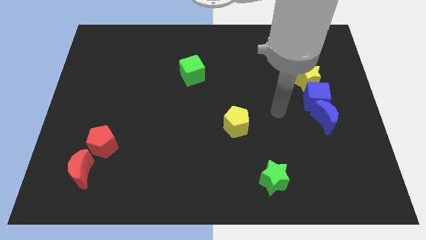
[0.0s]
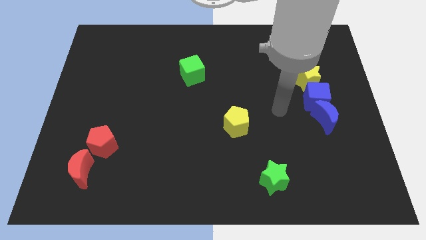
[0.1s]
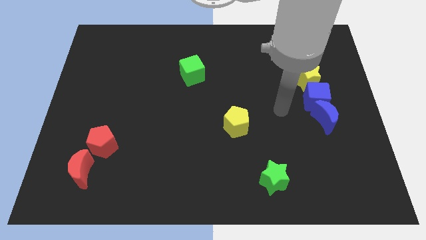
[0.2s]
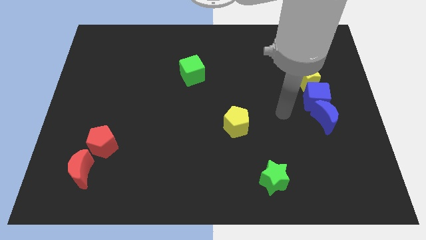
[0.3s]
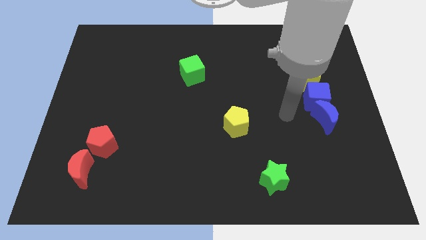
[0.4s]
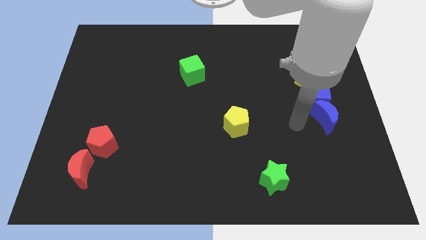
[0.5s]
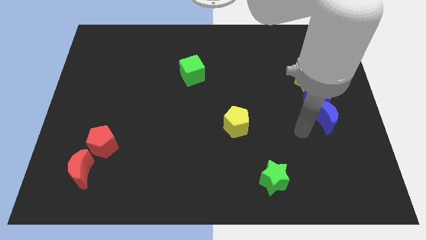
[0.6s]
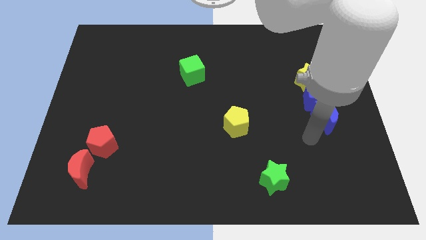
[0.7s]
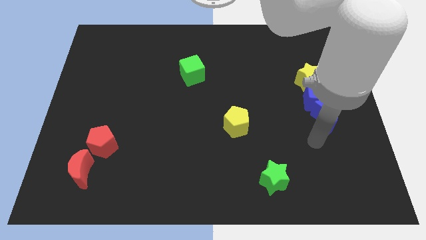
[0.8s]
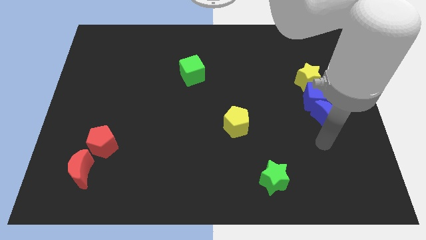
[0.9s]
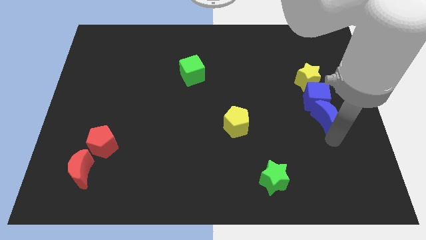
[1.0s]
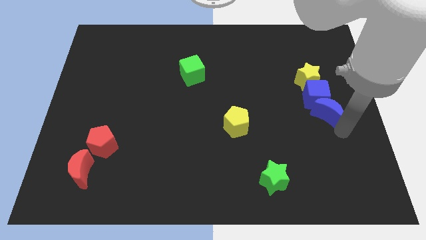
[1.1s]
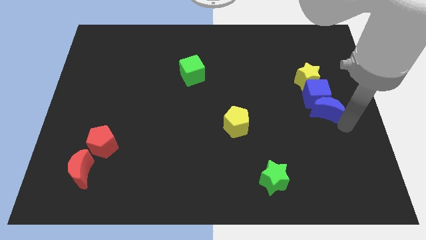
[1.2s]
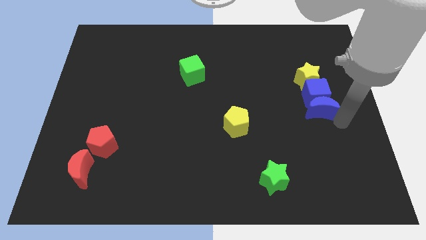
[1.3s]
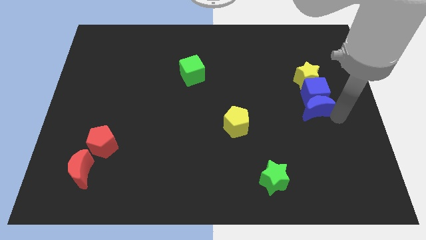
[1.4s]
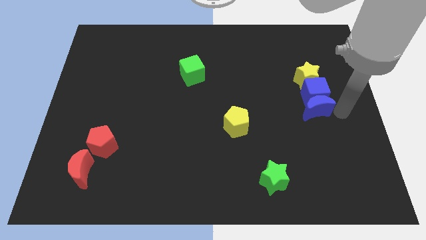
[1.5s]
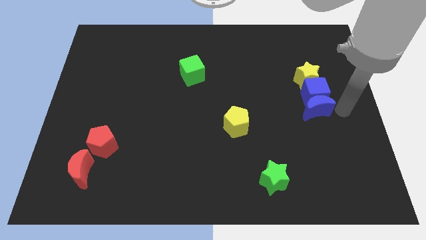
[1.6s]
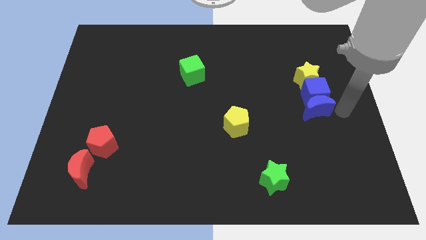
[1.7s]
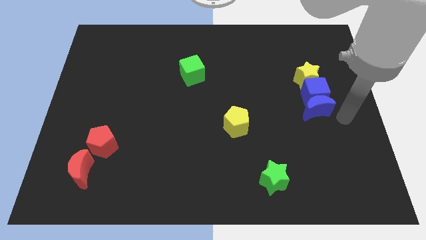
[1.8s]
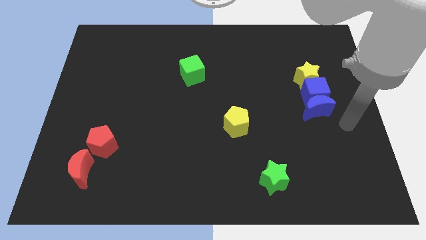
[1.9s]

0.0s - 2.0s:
move blue moon close to blue cube

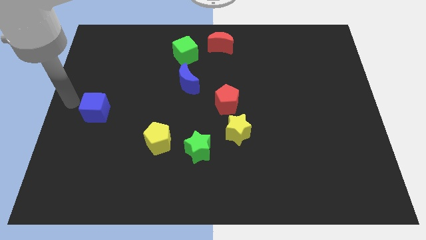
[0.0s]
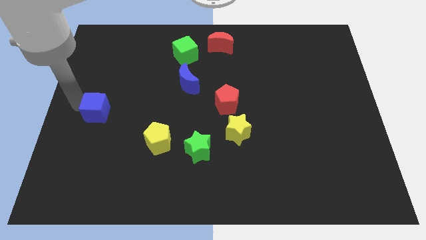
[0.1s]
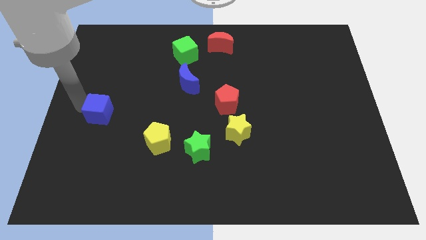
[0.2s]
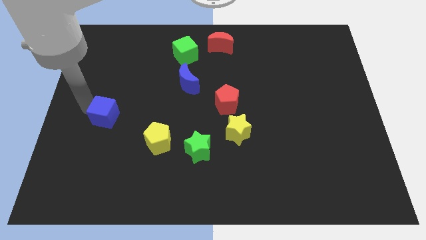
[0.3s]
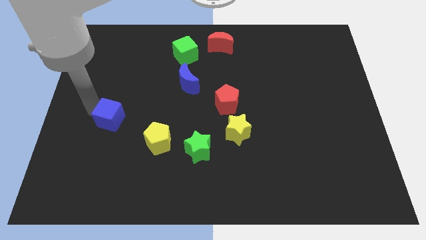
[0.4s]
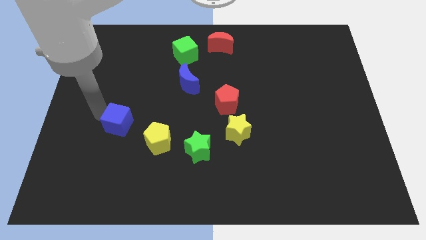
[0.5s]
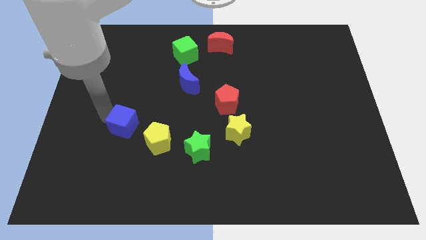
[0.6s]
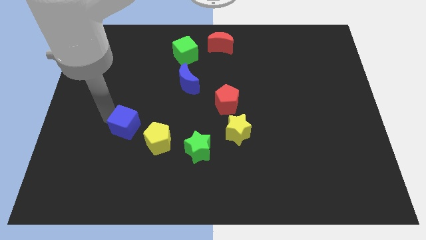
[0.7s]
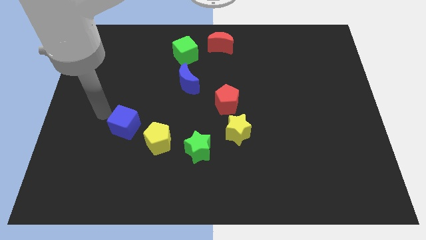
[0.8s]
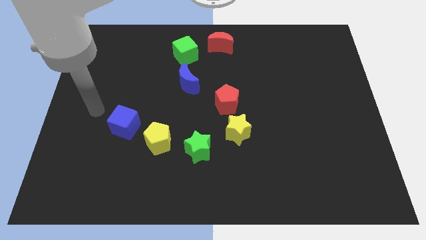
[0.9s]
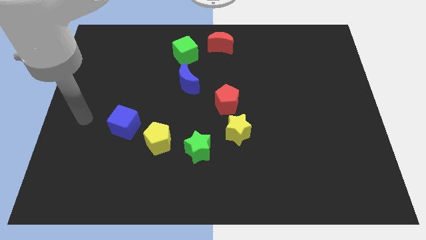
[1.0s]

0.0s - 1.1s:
move blue cube to the diagonal top left of the yellow pentagon

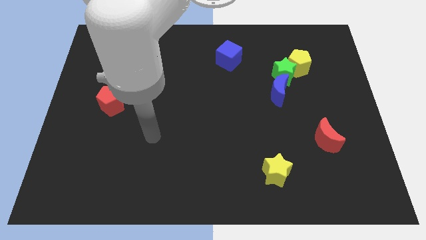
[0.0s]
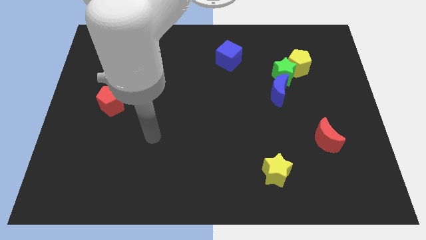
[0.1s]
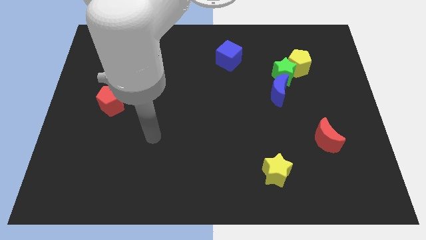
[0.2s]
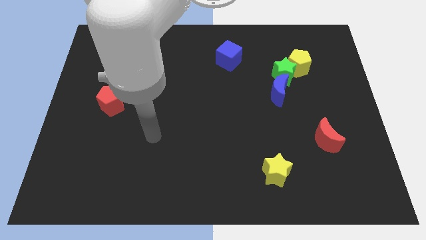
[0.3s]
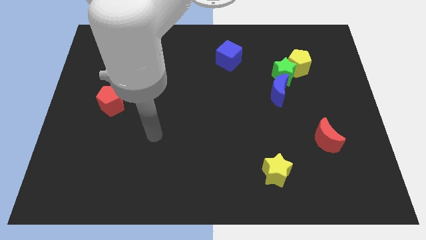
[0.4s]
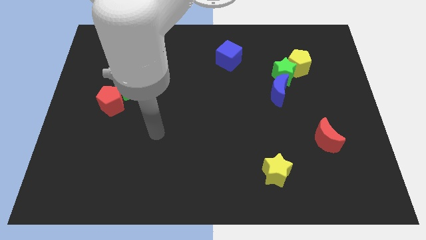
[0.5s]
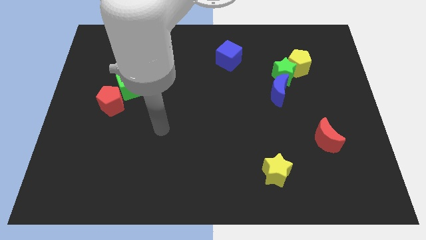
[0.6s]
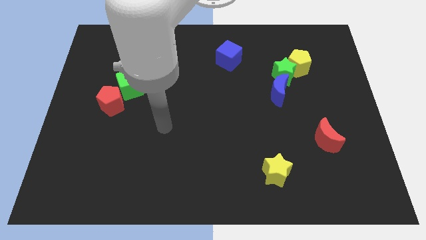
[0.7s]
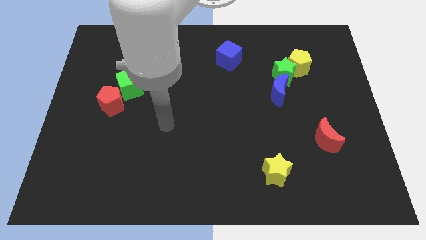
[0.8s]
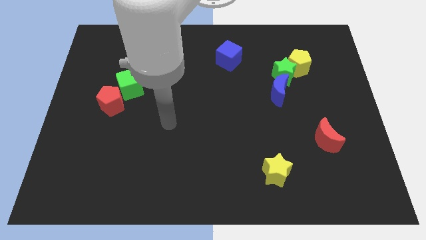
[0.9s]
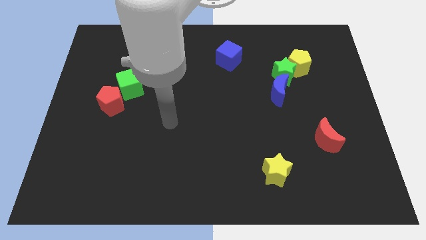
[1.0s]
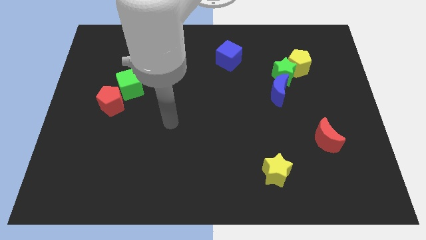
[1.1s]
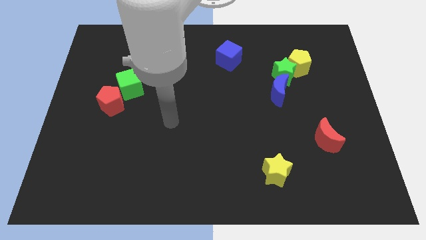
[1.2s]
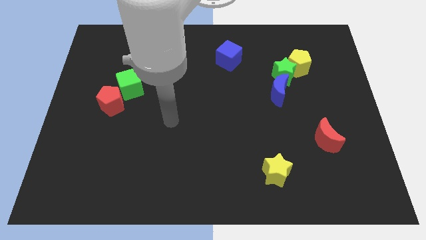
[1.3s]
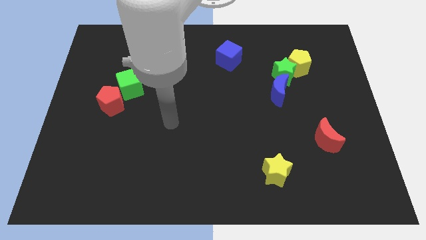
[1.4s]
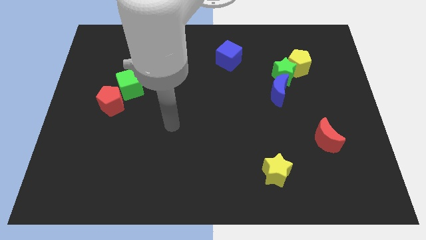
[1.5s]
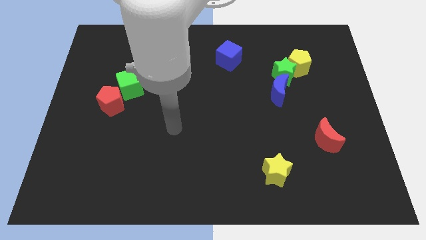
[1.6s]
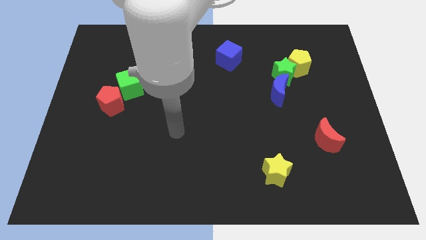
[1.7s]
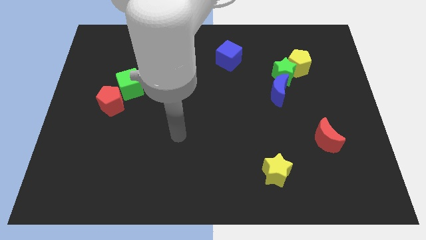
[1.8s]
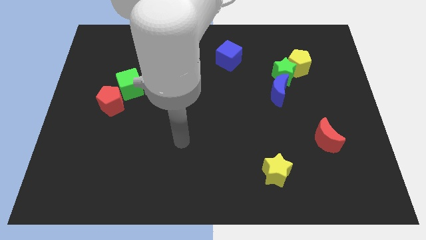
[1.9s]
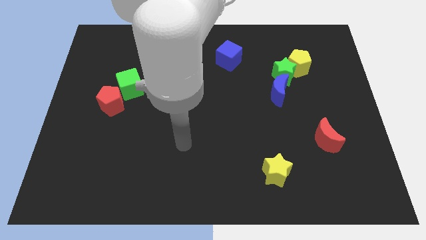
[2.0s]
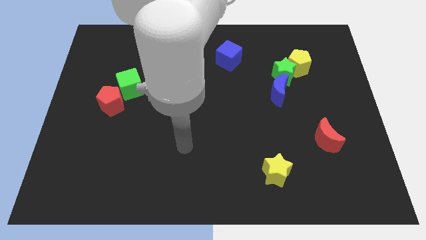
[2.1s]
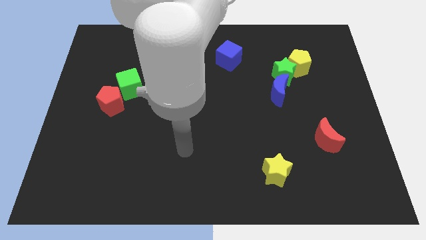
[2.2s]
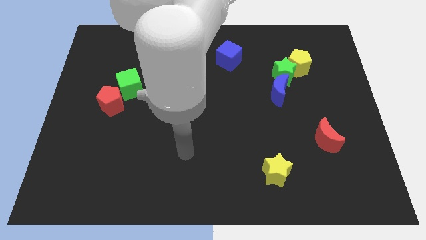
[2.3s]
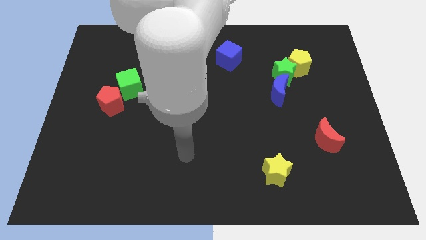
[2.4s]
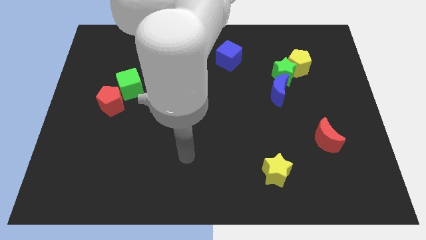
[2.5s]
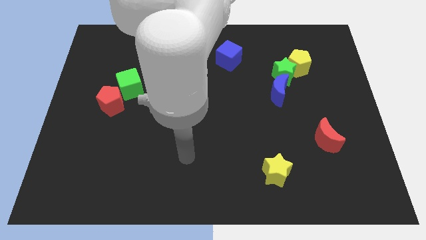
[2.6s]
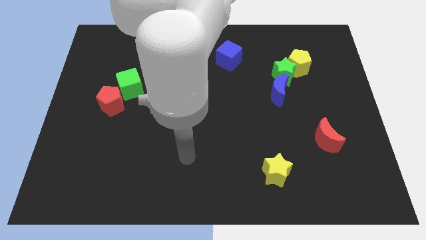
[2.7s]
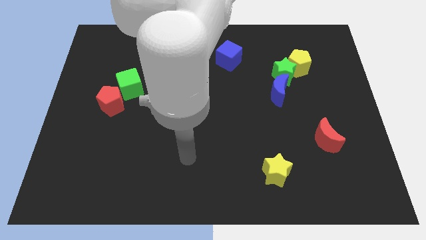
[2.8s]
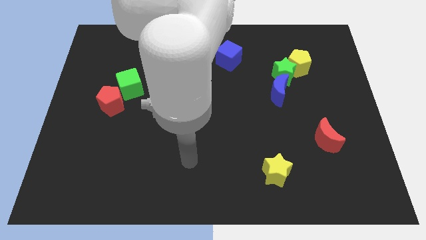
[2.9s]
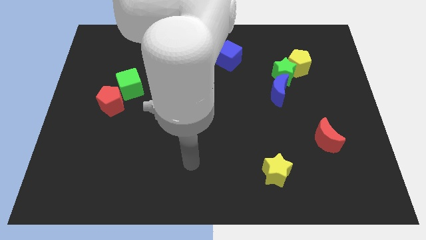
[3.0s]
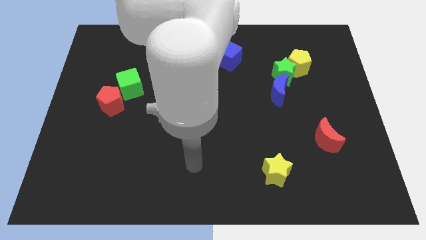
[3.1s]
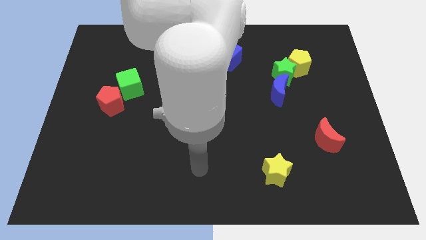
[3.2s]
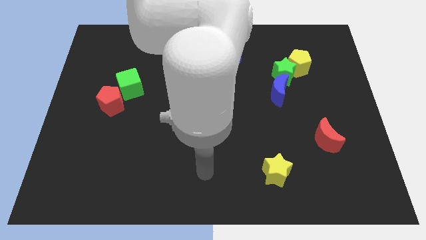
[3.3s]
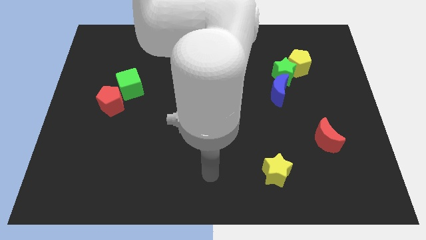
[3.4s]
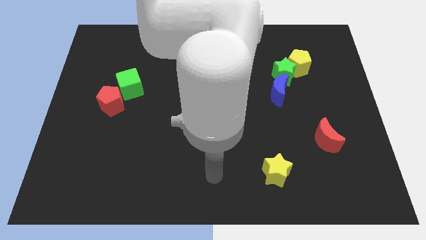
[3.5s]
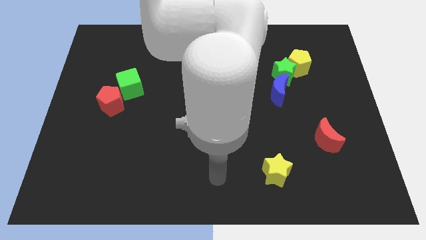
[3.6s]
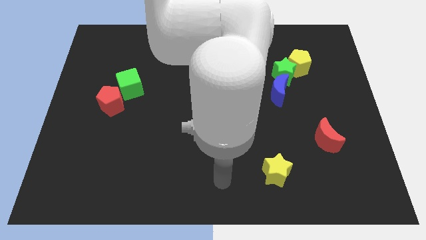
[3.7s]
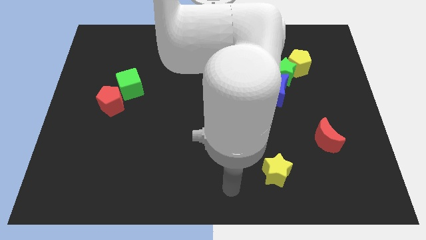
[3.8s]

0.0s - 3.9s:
move your arm to the bottom center of the board

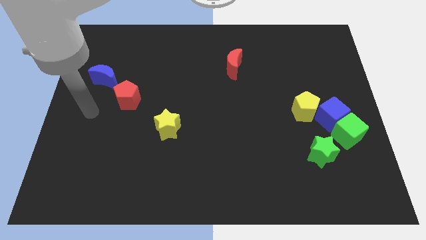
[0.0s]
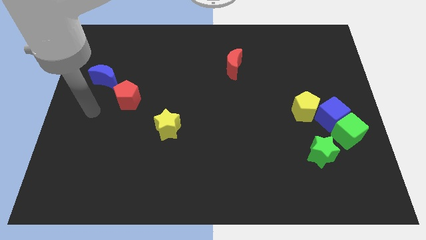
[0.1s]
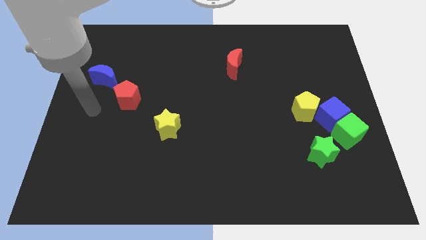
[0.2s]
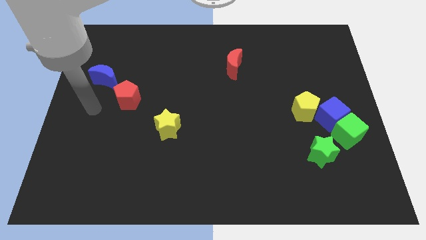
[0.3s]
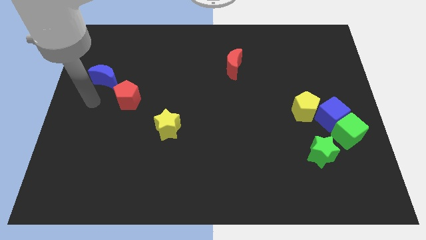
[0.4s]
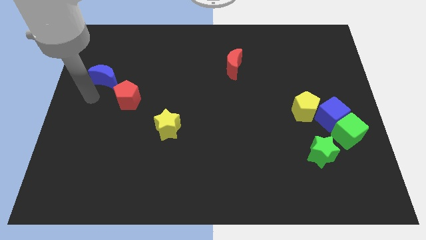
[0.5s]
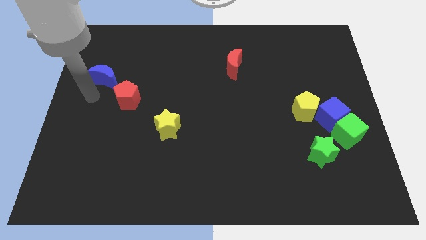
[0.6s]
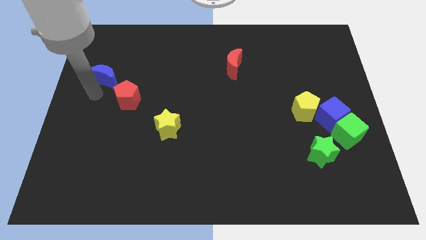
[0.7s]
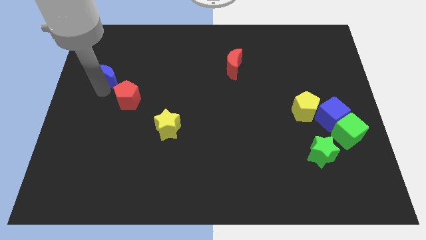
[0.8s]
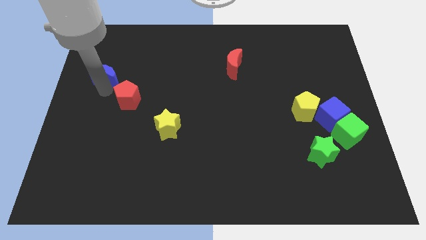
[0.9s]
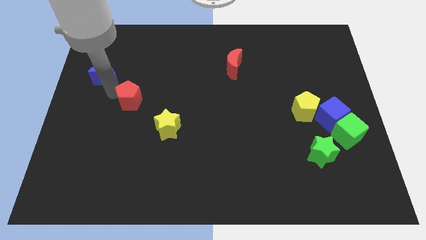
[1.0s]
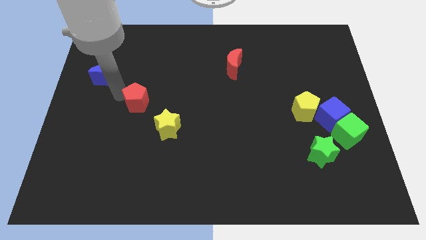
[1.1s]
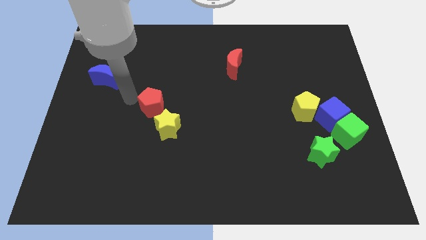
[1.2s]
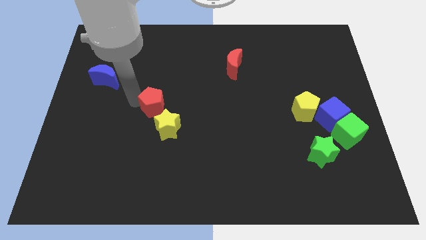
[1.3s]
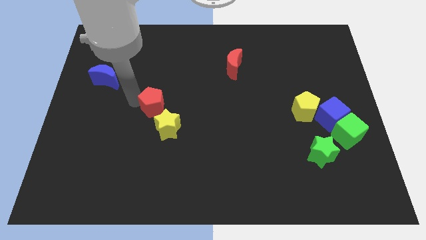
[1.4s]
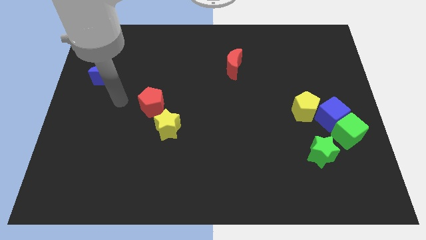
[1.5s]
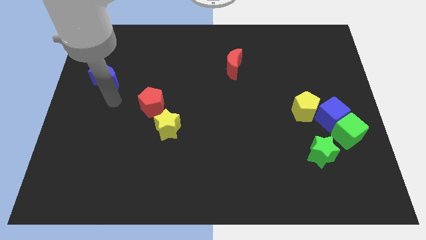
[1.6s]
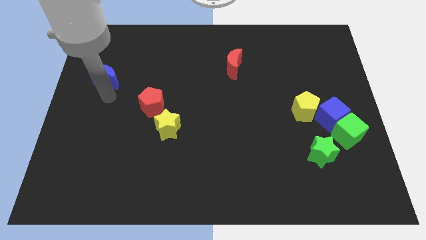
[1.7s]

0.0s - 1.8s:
move the red pentagon away from the blue crescent

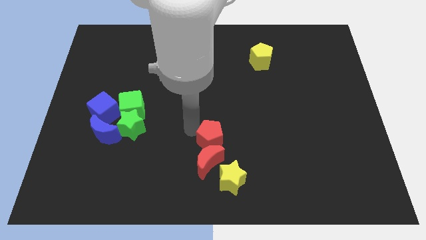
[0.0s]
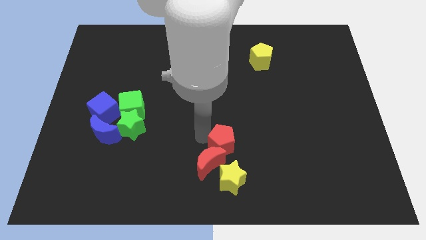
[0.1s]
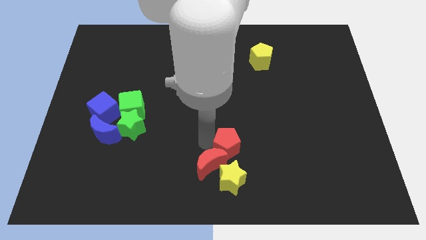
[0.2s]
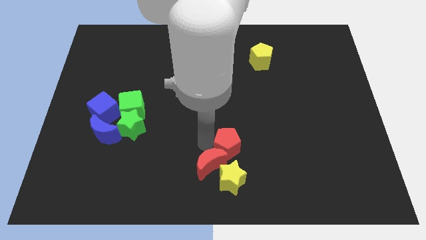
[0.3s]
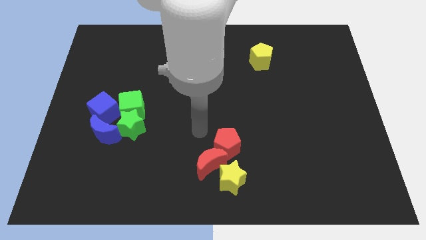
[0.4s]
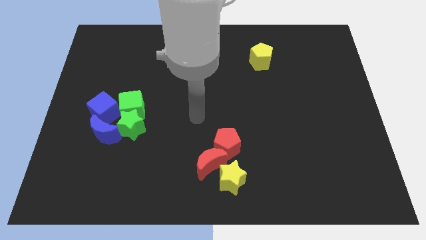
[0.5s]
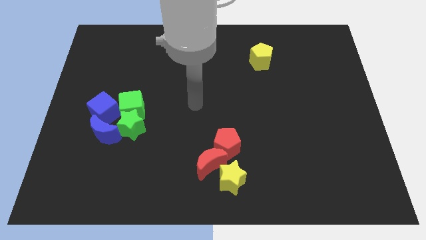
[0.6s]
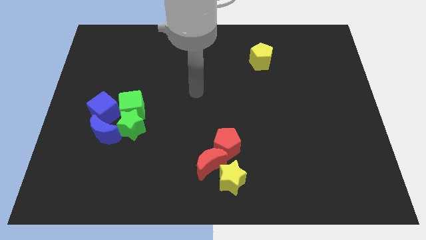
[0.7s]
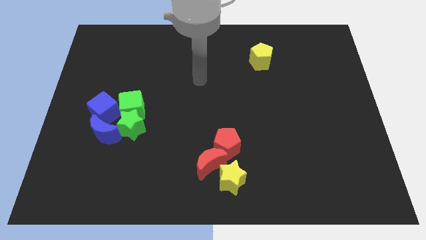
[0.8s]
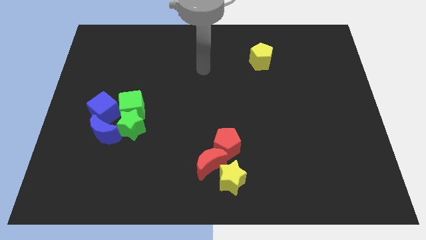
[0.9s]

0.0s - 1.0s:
slightly push the red pentagon on top right to red moon
